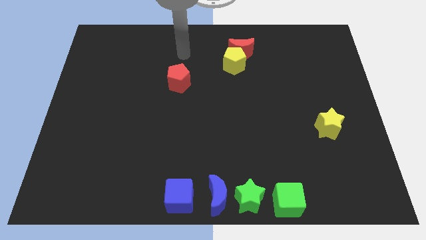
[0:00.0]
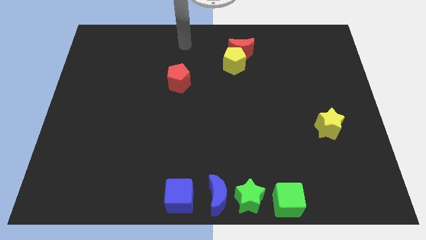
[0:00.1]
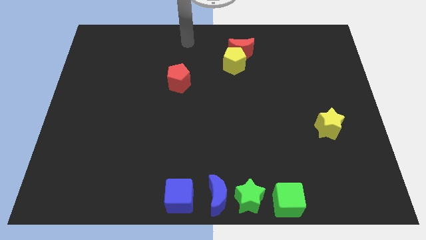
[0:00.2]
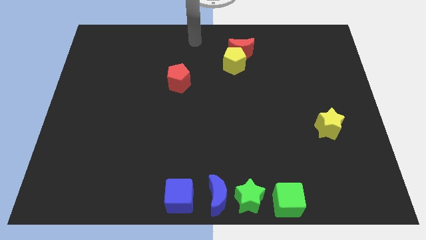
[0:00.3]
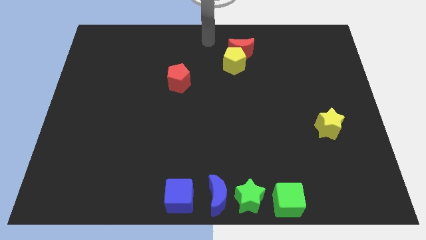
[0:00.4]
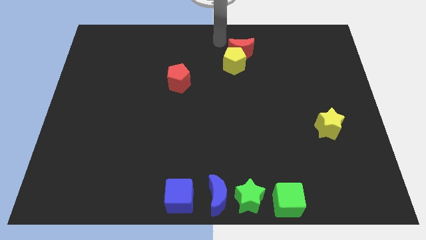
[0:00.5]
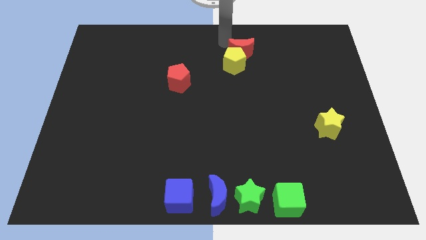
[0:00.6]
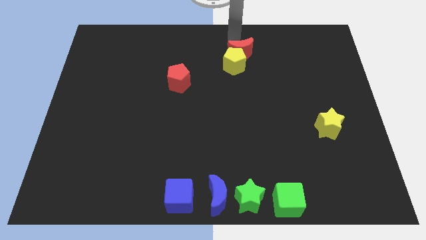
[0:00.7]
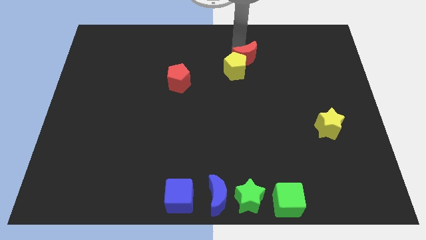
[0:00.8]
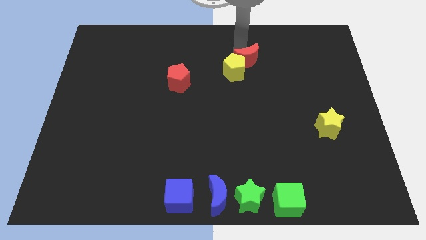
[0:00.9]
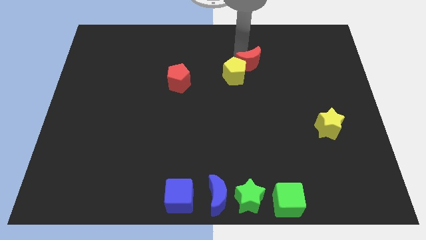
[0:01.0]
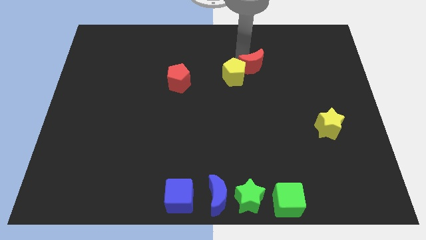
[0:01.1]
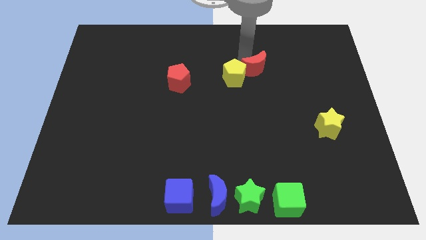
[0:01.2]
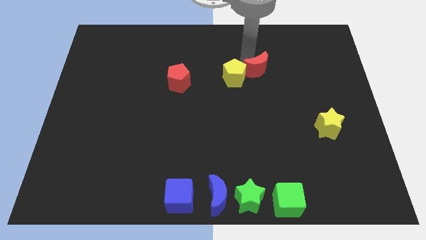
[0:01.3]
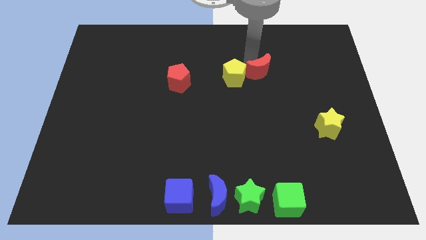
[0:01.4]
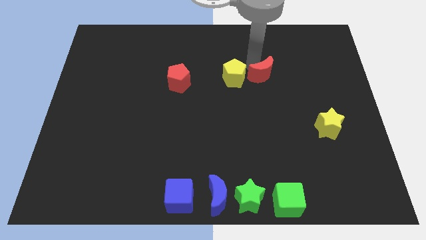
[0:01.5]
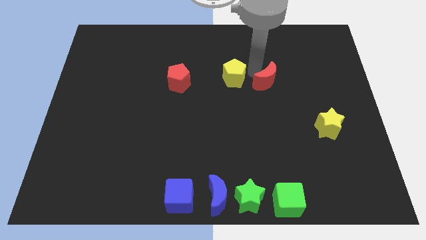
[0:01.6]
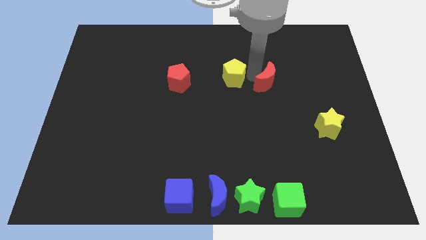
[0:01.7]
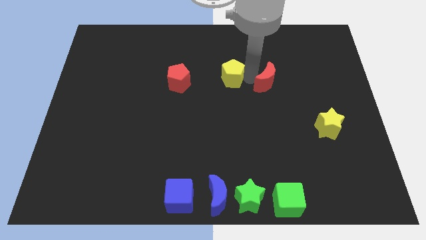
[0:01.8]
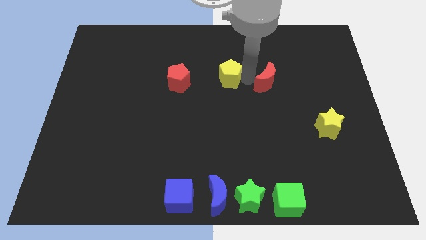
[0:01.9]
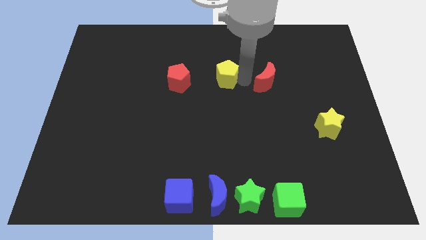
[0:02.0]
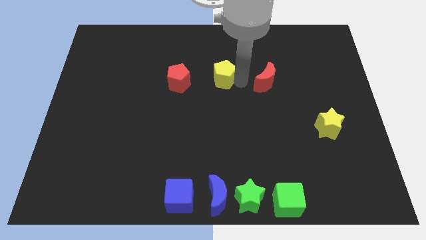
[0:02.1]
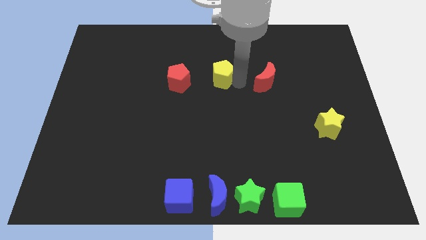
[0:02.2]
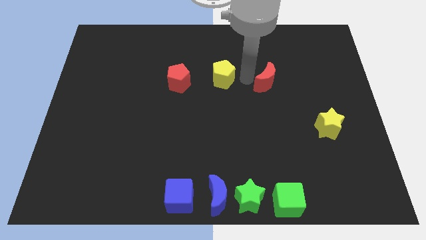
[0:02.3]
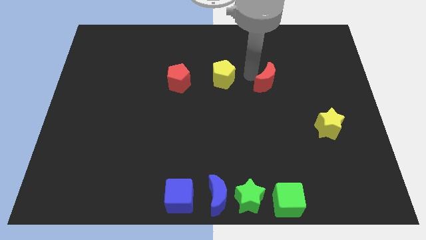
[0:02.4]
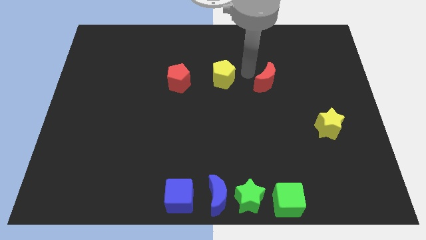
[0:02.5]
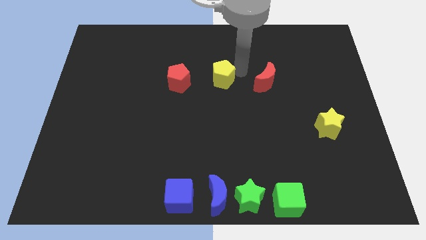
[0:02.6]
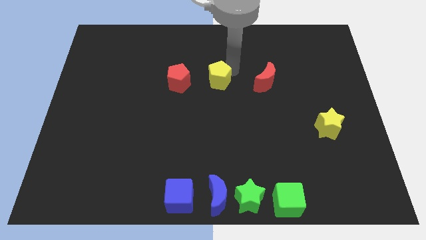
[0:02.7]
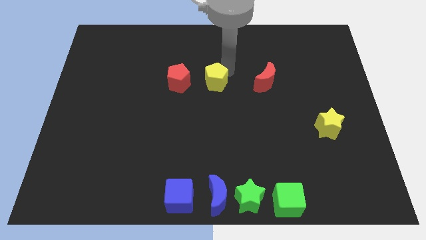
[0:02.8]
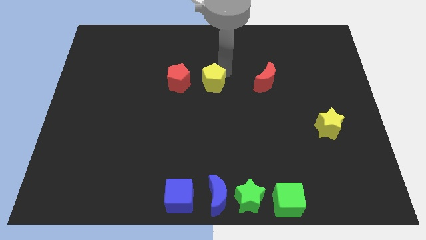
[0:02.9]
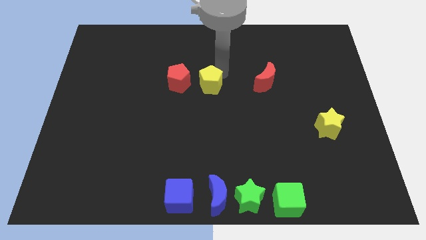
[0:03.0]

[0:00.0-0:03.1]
separate the yellow pentagon from the red moon

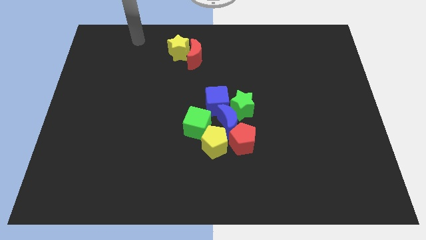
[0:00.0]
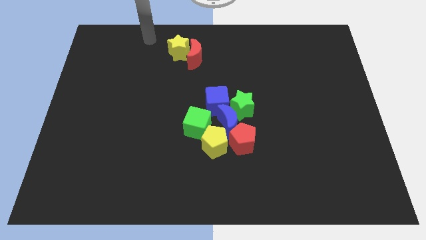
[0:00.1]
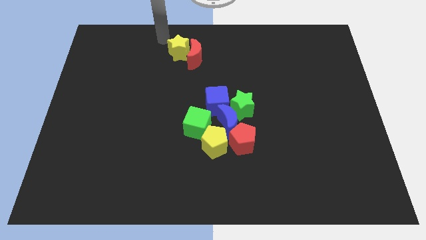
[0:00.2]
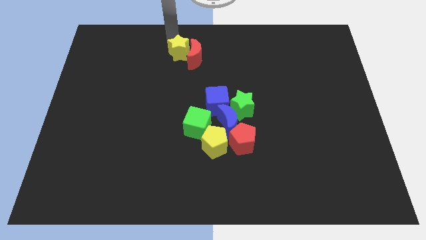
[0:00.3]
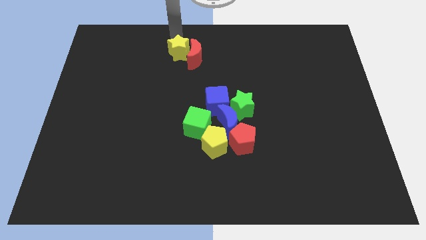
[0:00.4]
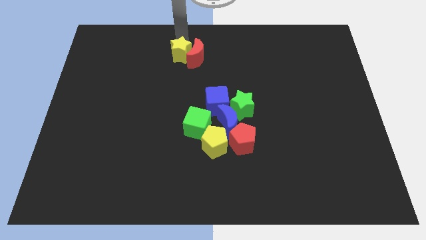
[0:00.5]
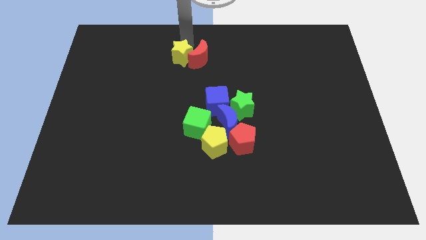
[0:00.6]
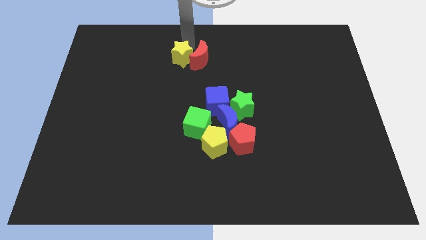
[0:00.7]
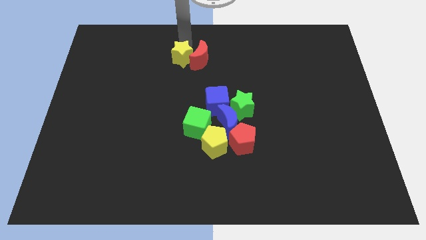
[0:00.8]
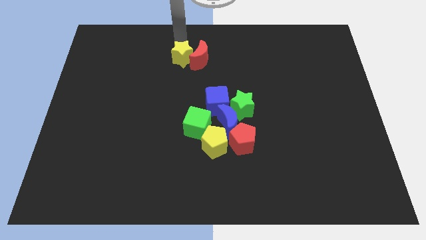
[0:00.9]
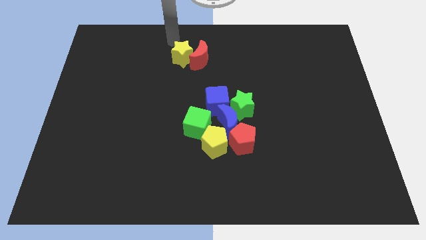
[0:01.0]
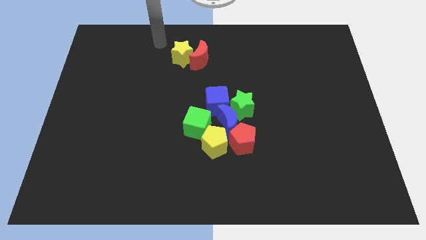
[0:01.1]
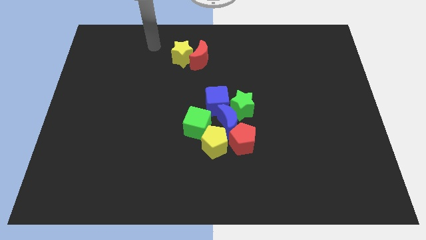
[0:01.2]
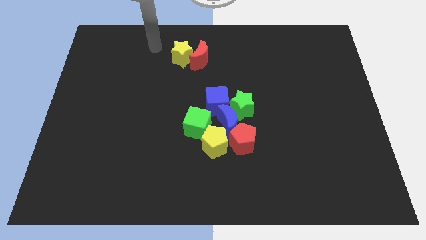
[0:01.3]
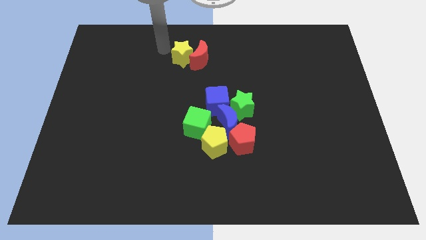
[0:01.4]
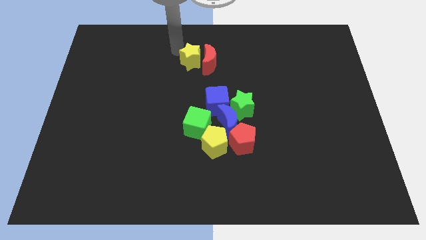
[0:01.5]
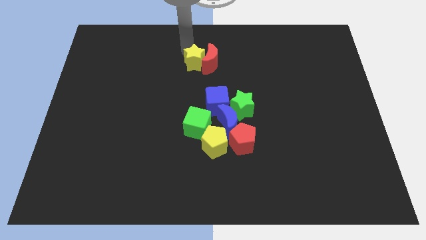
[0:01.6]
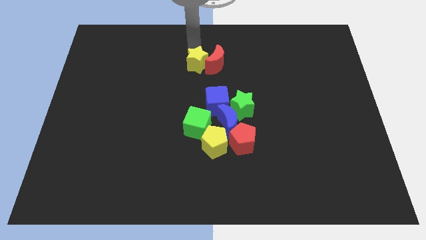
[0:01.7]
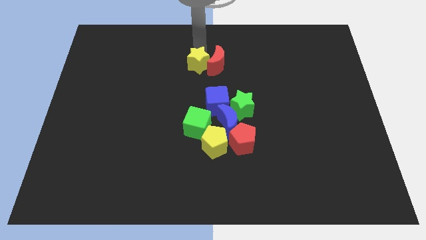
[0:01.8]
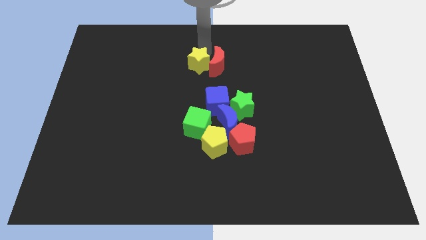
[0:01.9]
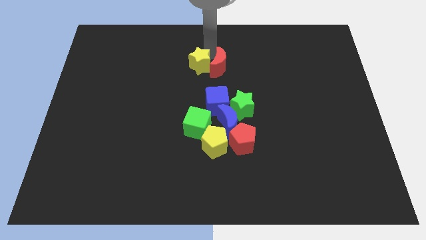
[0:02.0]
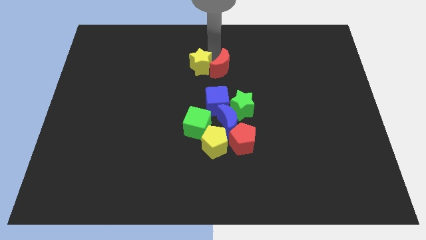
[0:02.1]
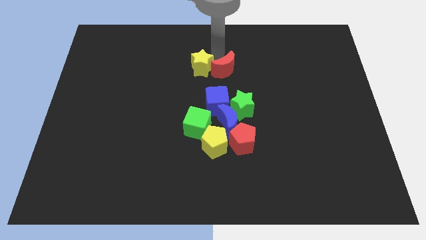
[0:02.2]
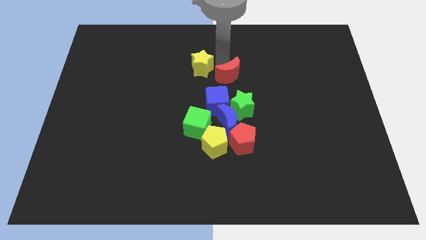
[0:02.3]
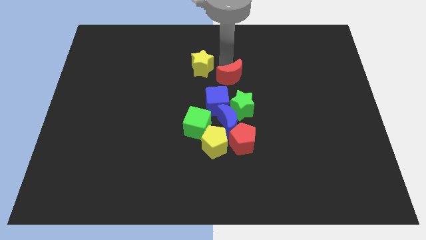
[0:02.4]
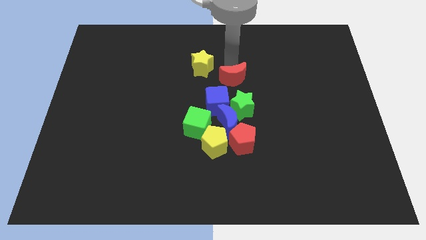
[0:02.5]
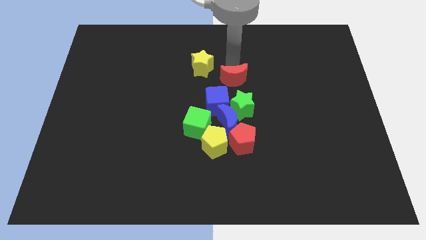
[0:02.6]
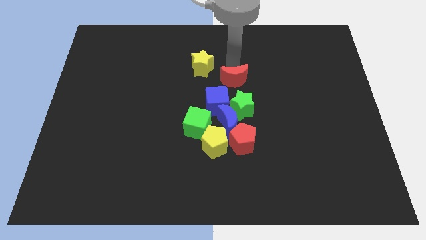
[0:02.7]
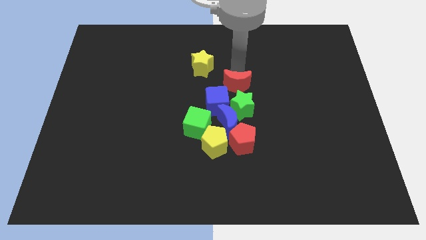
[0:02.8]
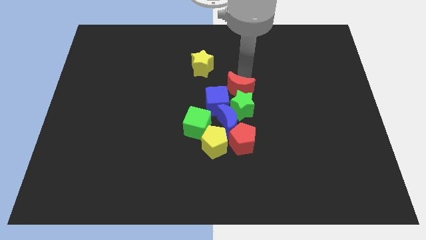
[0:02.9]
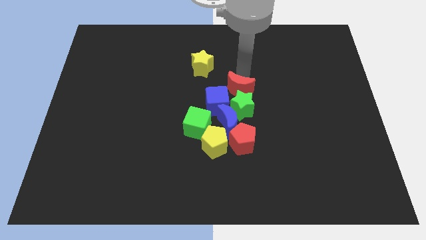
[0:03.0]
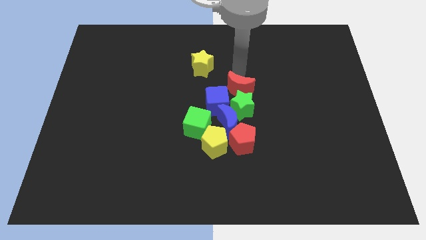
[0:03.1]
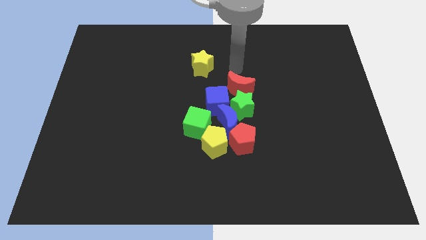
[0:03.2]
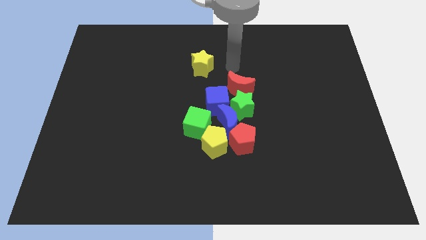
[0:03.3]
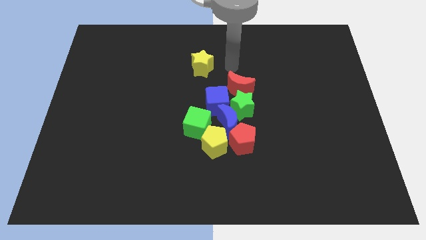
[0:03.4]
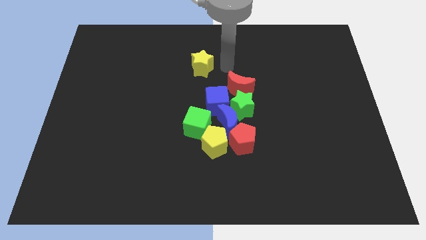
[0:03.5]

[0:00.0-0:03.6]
place the red crescent above the green star

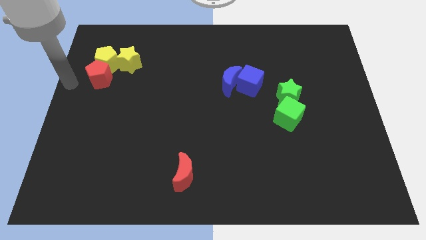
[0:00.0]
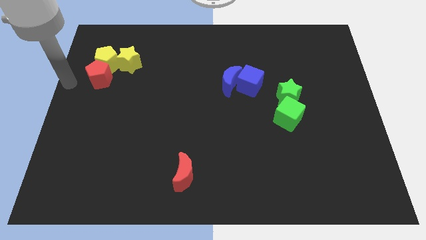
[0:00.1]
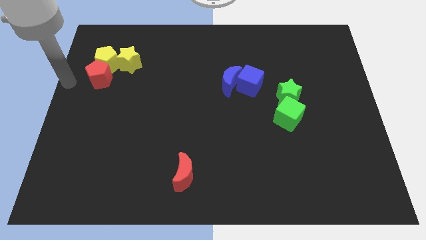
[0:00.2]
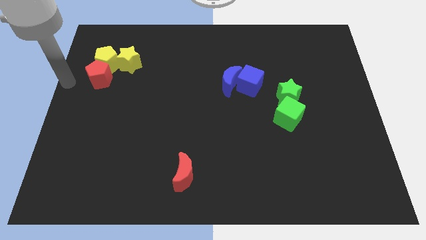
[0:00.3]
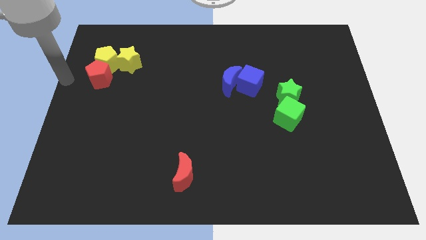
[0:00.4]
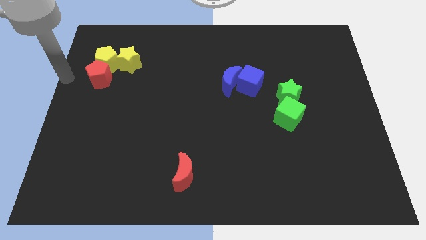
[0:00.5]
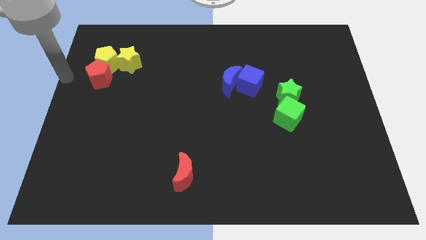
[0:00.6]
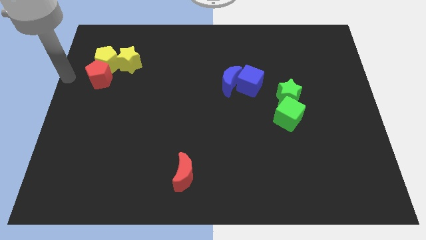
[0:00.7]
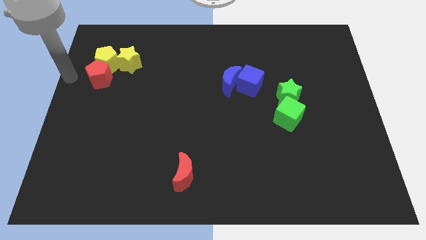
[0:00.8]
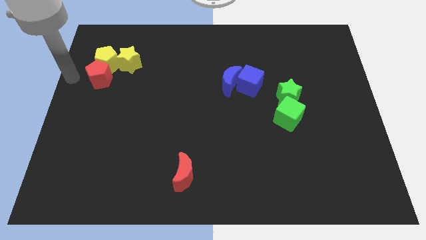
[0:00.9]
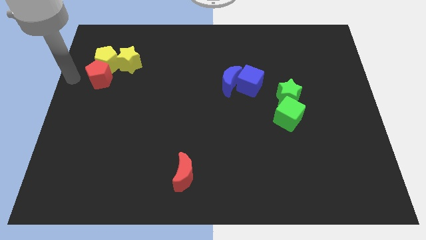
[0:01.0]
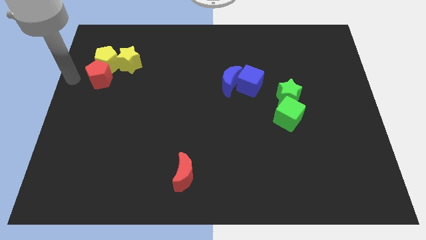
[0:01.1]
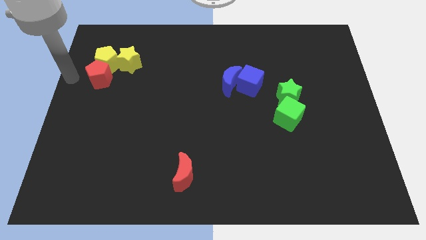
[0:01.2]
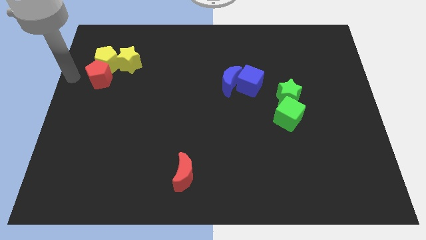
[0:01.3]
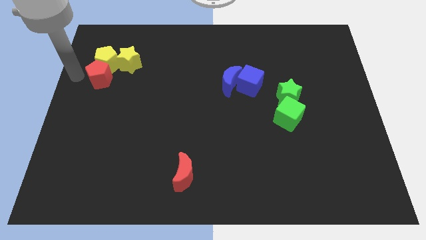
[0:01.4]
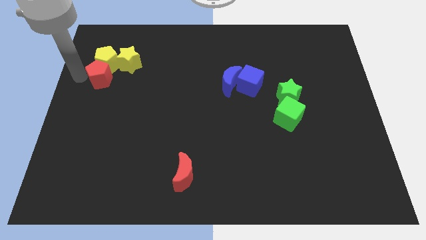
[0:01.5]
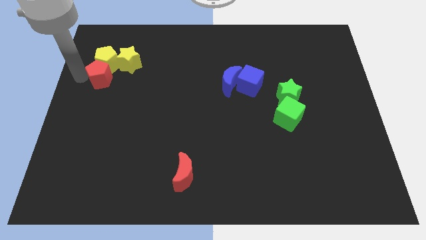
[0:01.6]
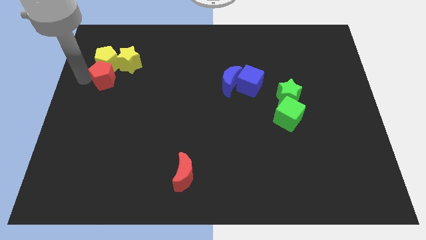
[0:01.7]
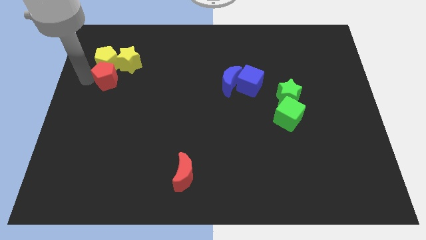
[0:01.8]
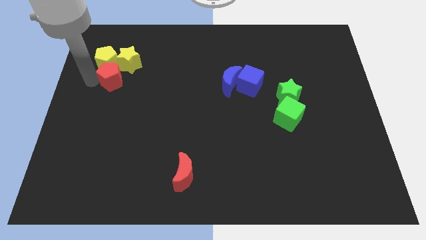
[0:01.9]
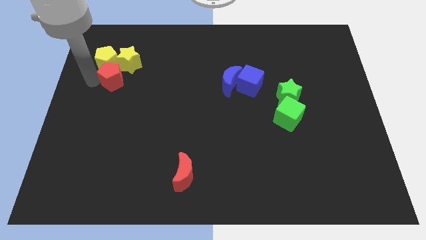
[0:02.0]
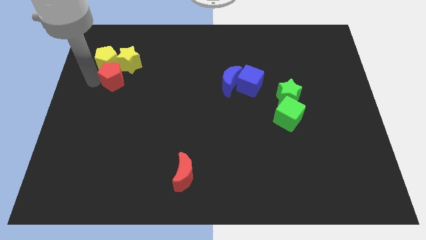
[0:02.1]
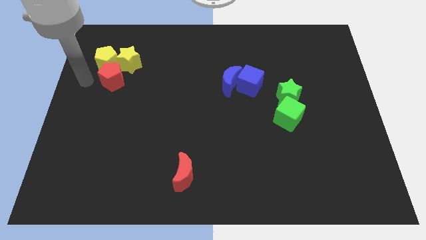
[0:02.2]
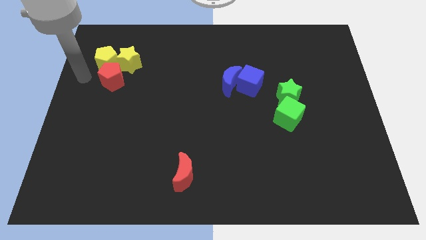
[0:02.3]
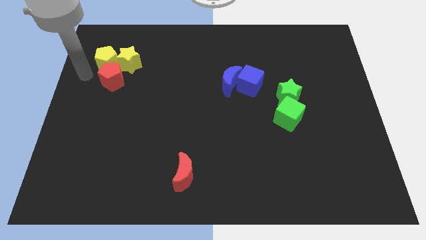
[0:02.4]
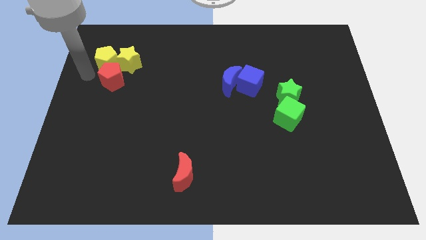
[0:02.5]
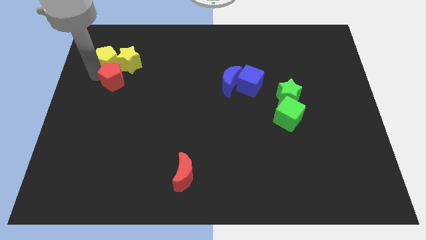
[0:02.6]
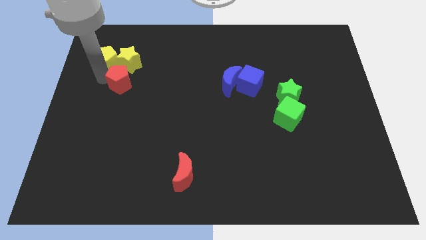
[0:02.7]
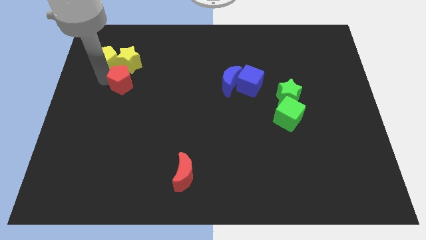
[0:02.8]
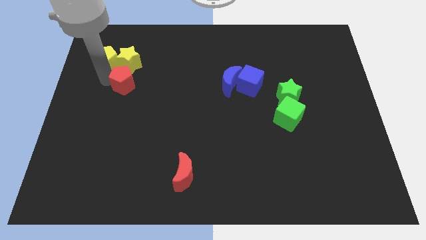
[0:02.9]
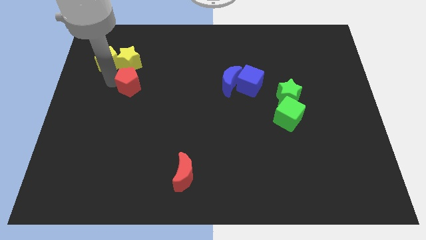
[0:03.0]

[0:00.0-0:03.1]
push the red pentagon to the bottom of the yellow star
